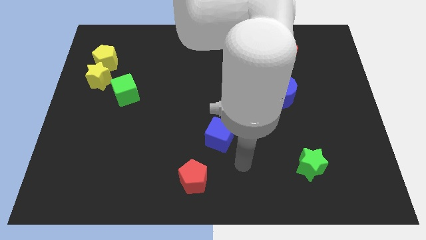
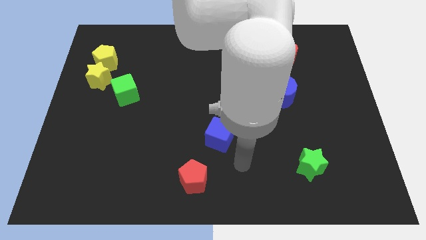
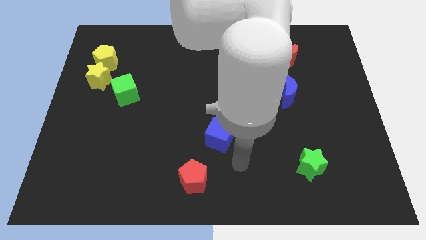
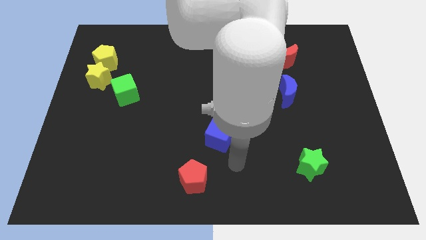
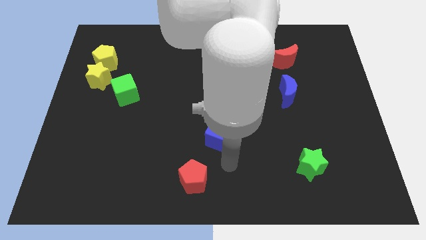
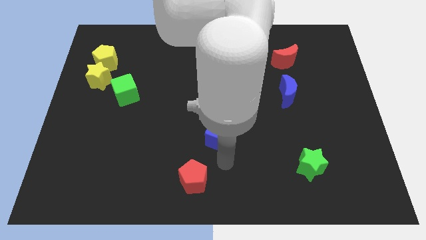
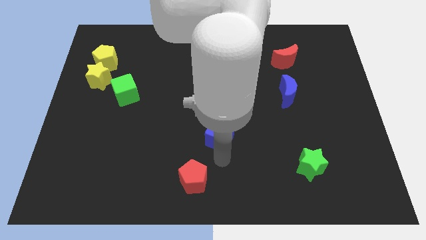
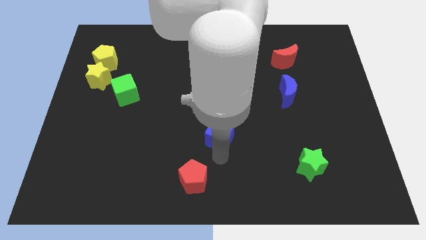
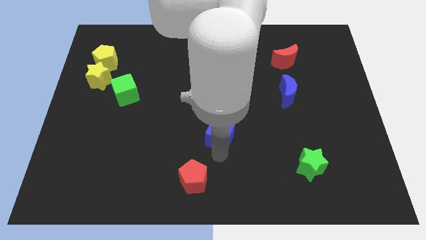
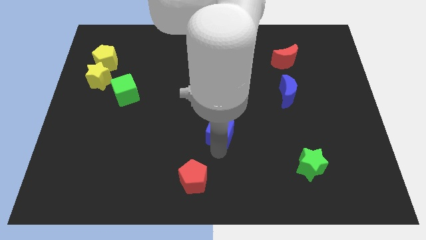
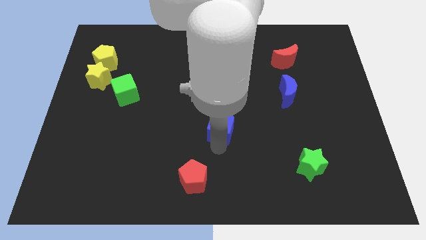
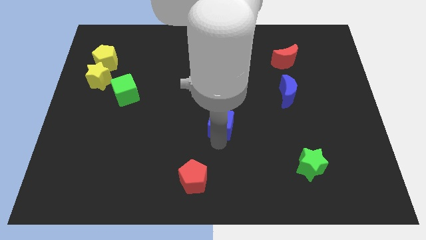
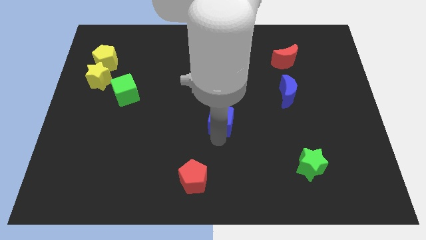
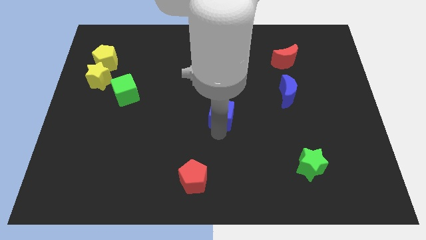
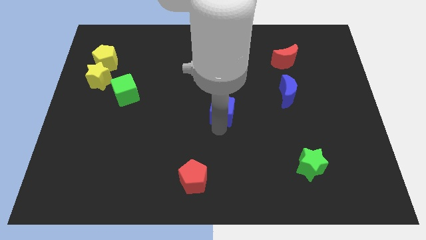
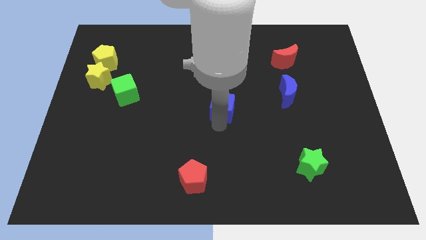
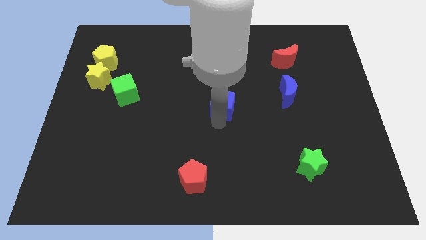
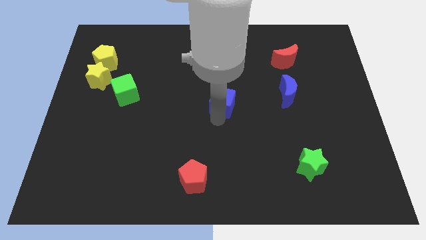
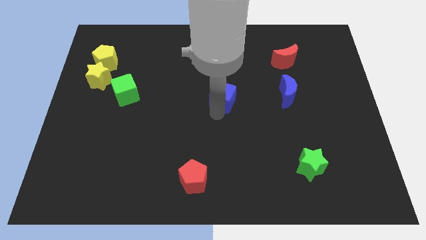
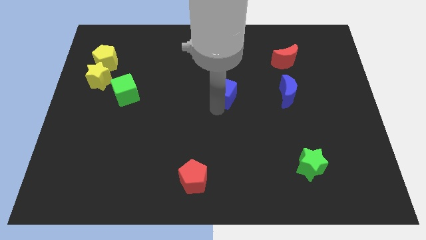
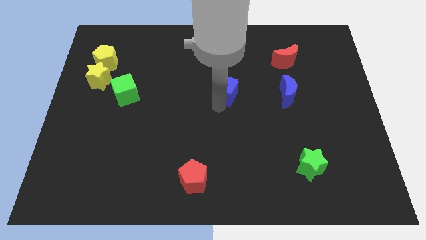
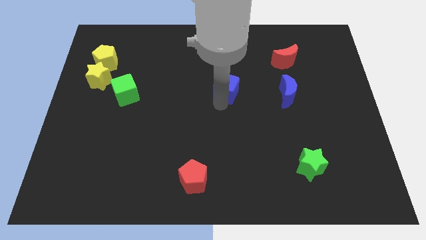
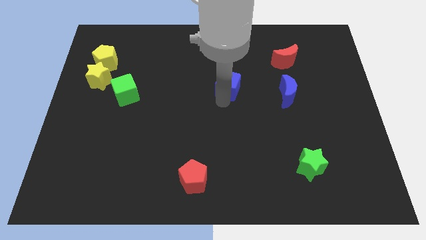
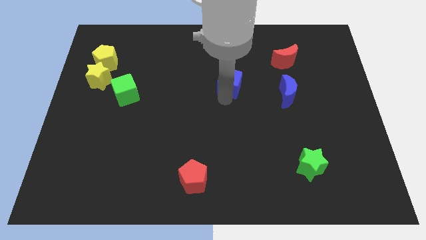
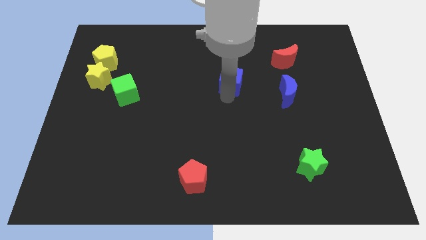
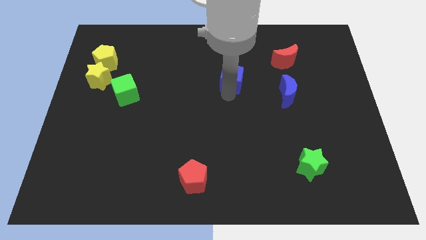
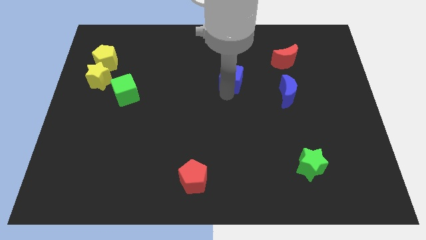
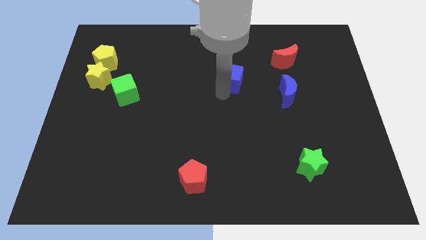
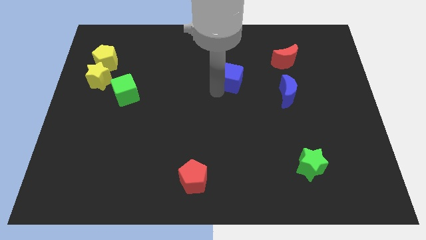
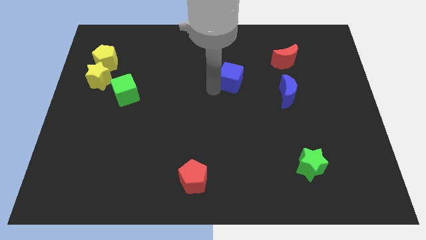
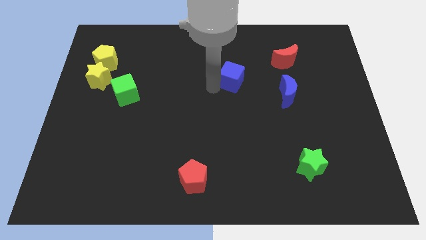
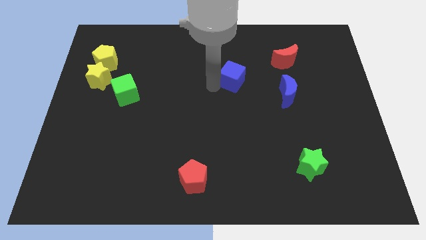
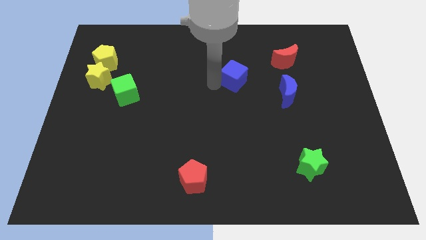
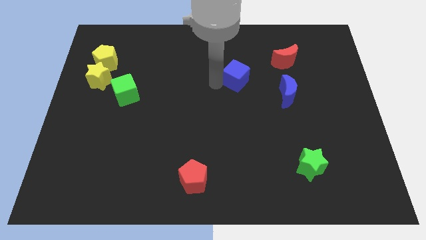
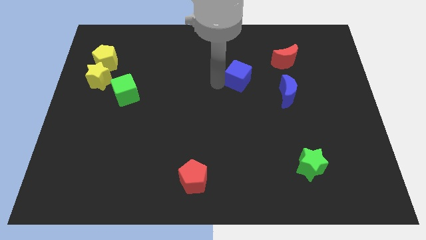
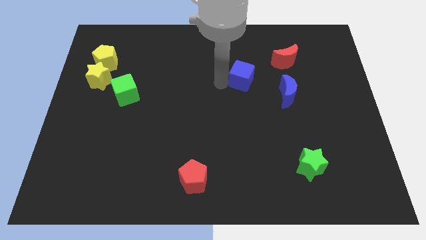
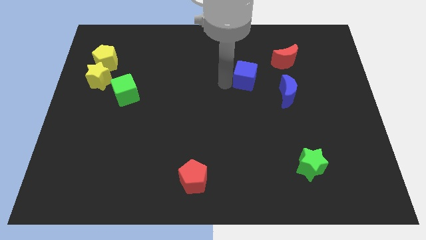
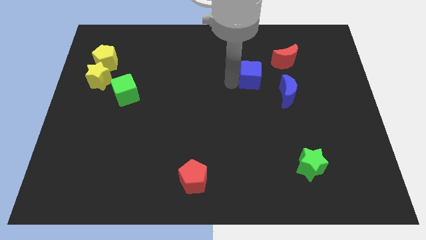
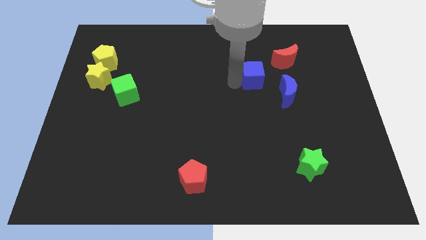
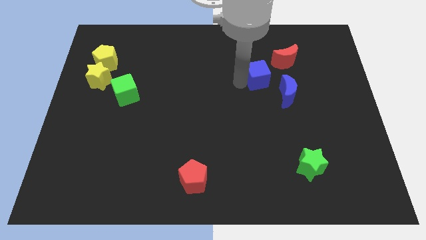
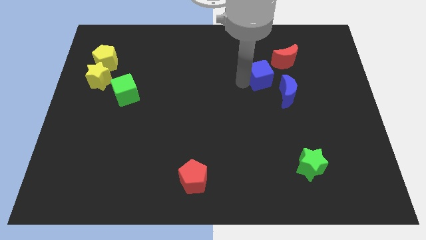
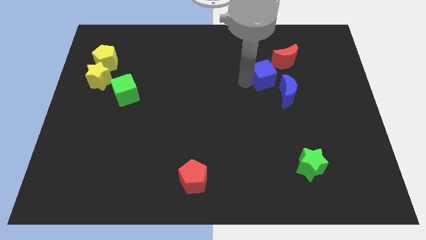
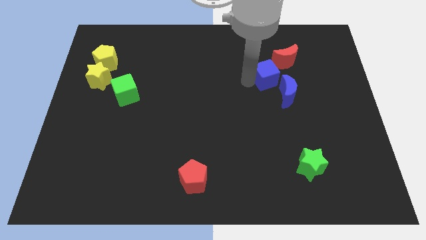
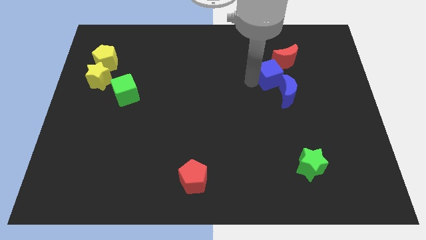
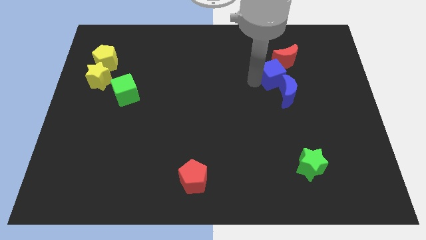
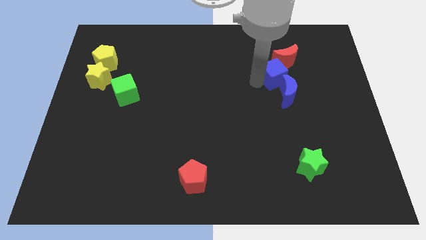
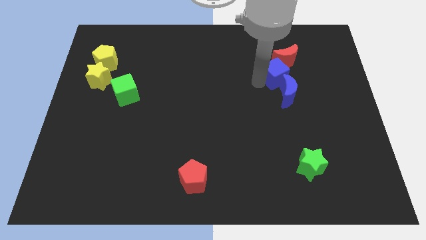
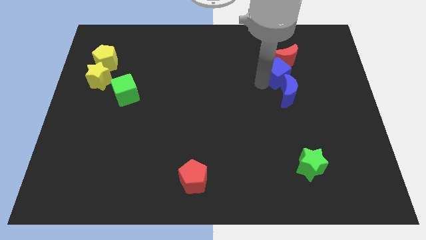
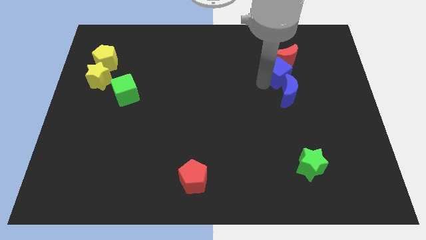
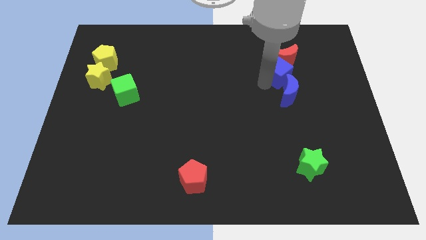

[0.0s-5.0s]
put the blue cube towards the red moon

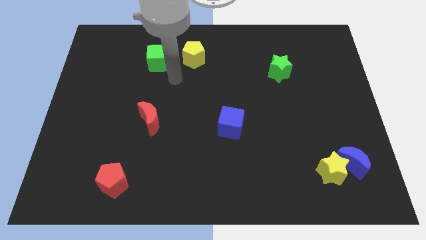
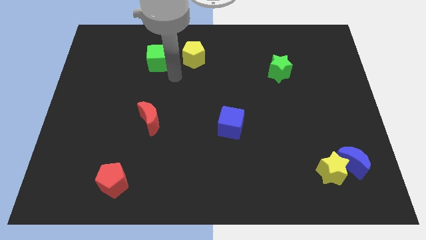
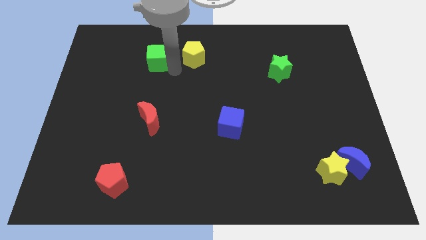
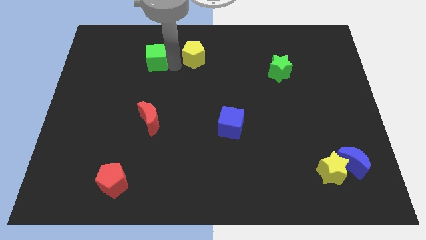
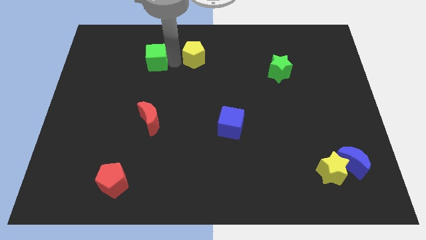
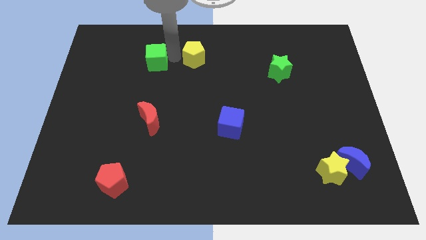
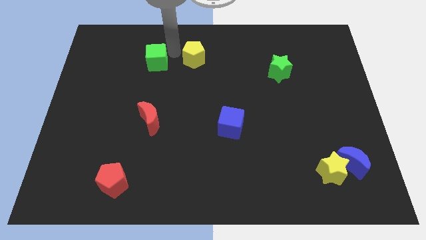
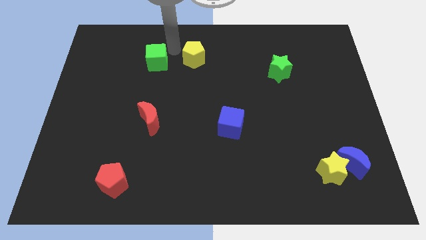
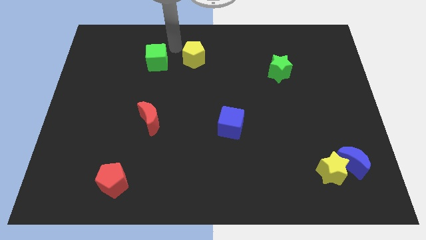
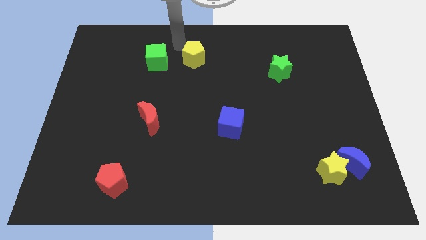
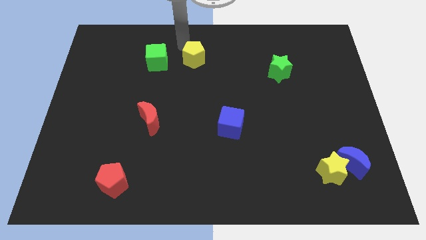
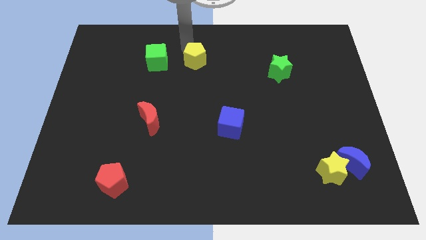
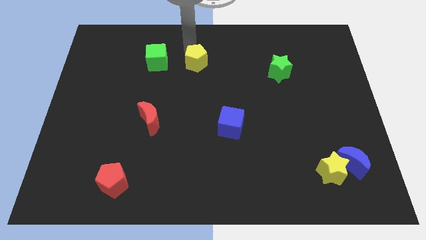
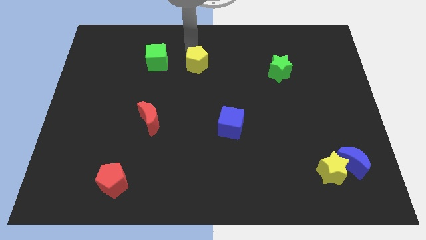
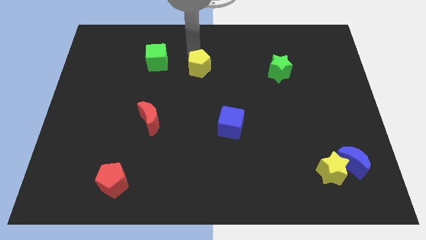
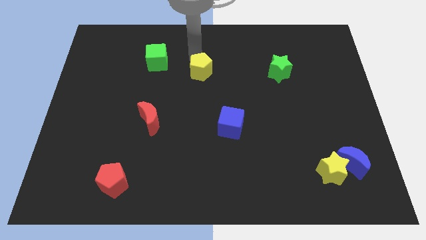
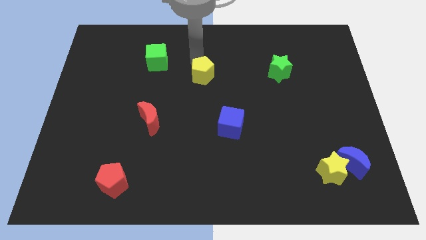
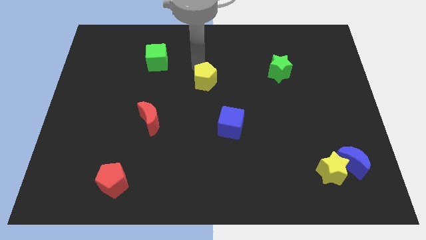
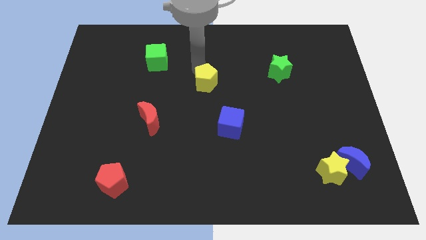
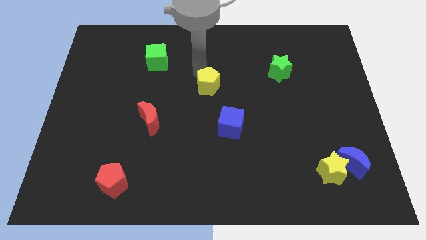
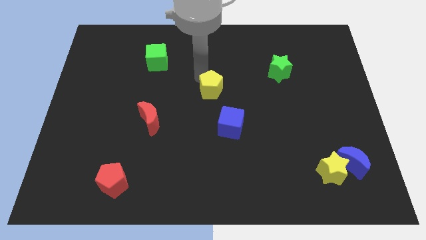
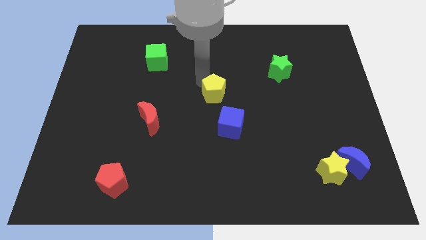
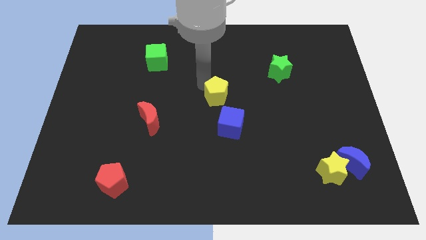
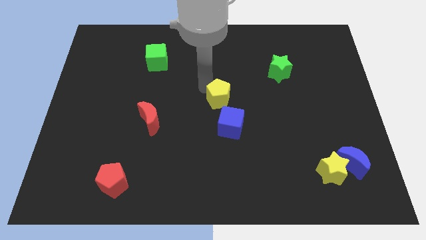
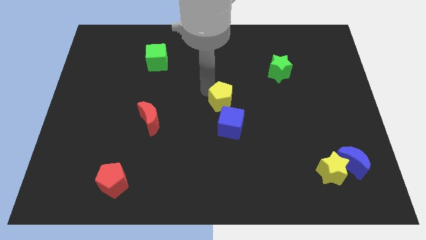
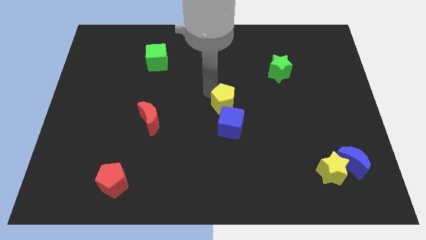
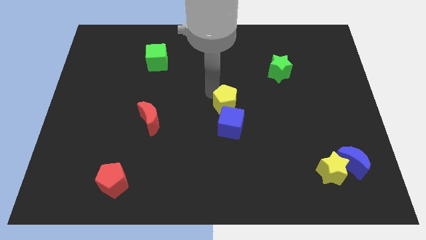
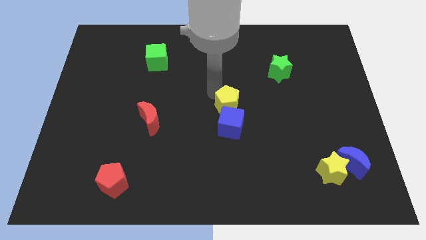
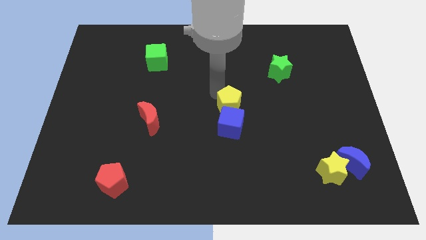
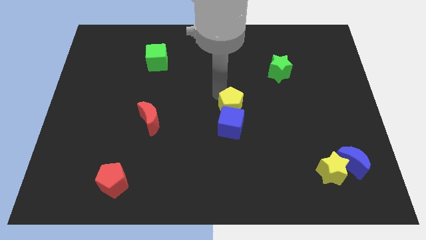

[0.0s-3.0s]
push the yellow pentagon close to the blue cube

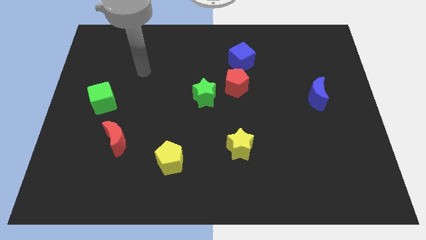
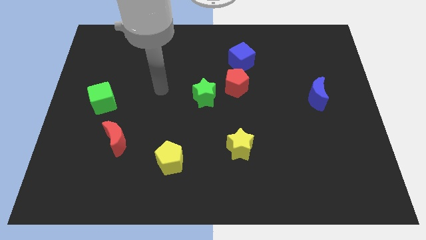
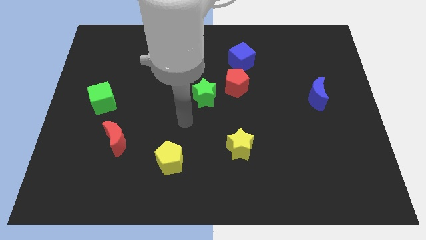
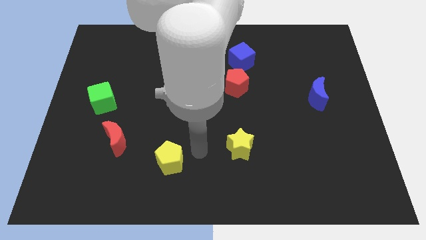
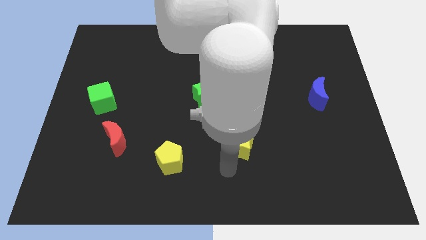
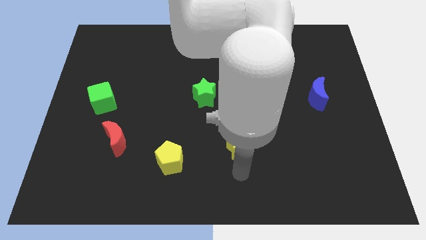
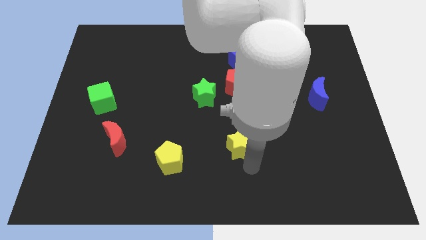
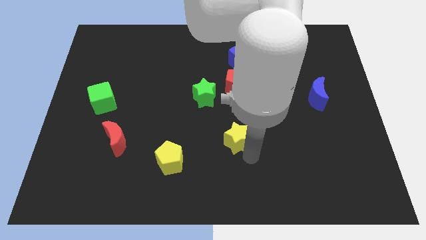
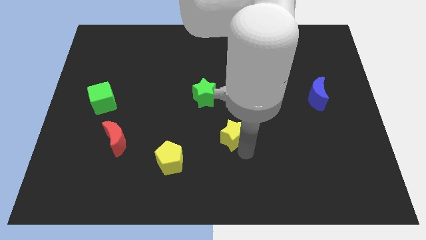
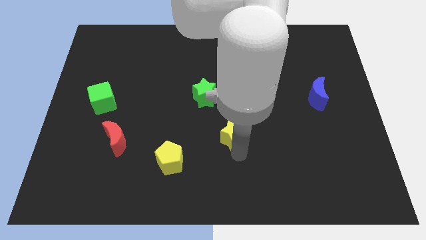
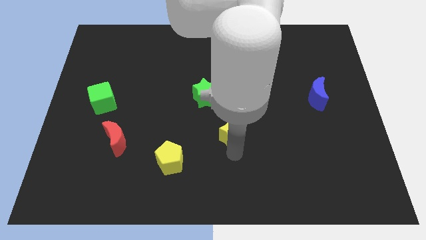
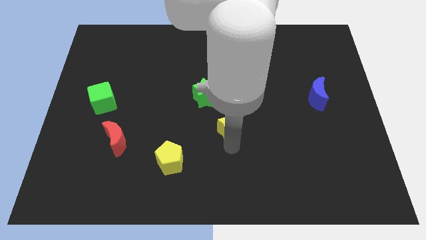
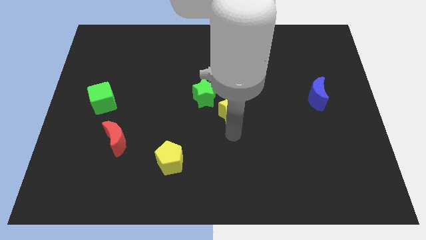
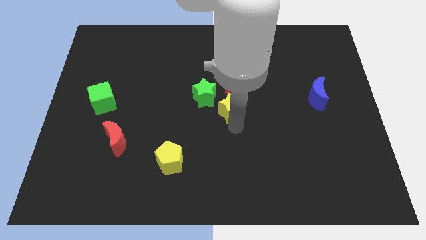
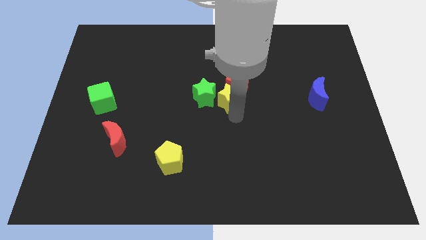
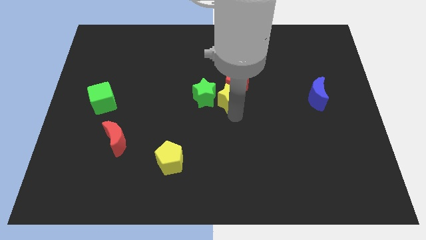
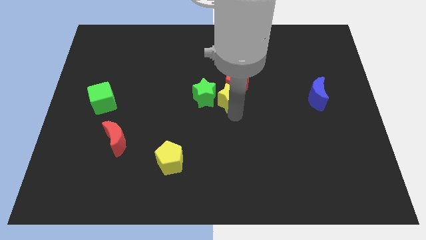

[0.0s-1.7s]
slide the yellow star towards the red pentagon
